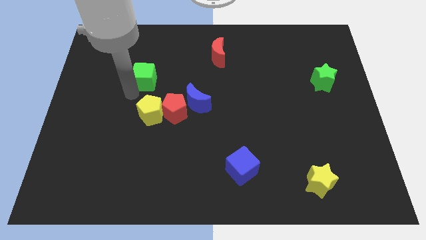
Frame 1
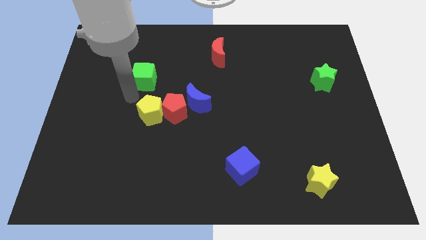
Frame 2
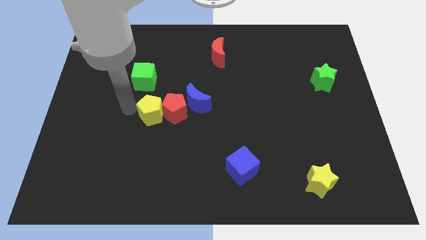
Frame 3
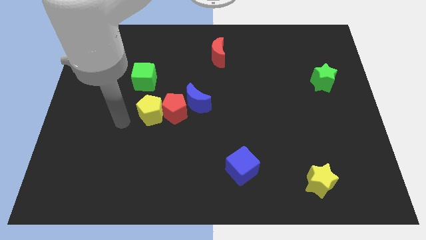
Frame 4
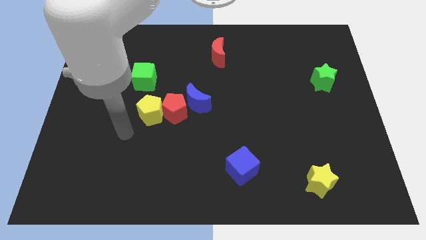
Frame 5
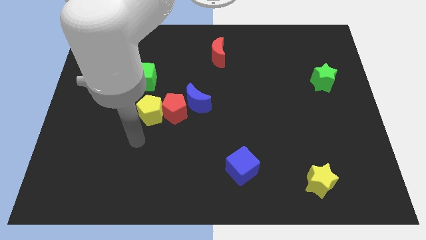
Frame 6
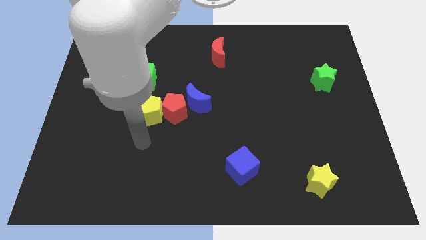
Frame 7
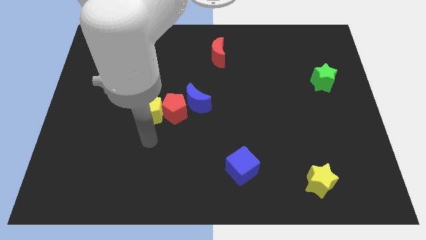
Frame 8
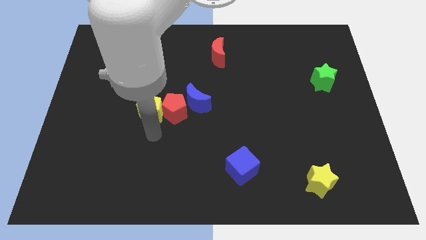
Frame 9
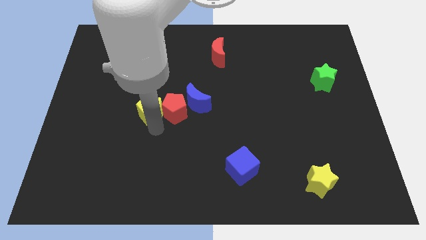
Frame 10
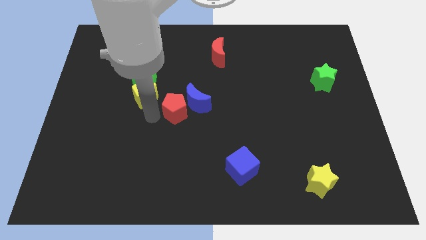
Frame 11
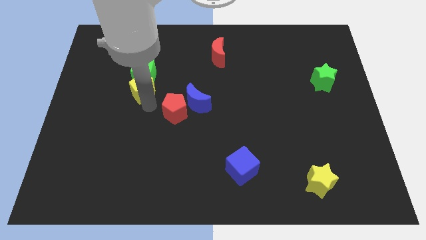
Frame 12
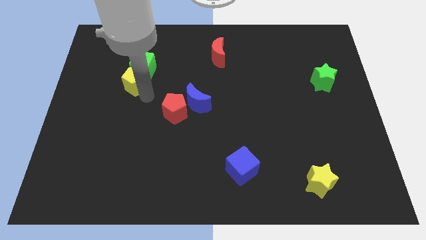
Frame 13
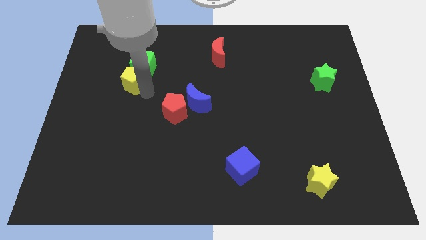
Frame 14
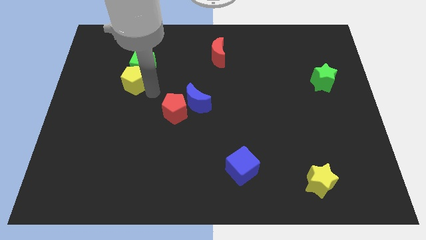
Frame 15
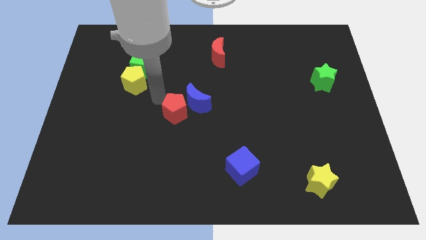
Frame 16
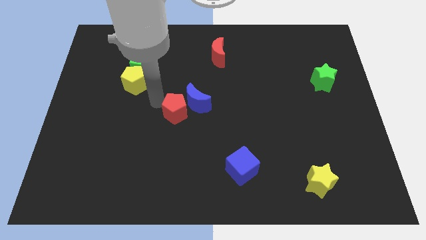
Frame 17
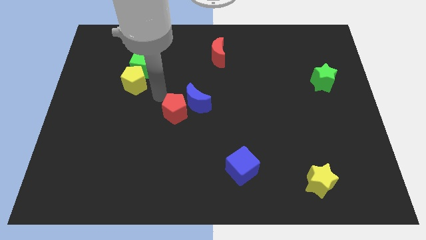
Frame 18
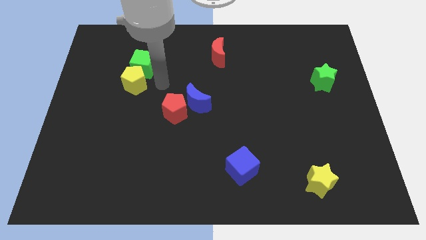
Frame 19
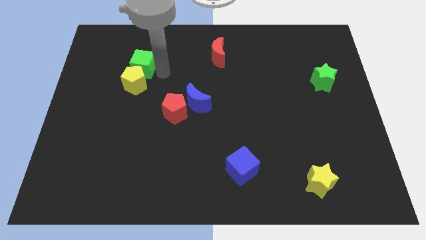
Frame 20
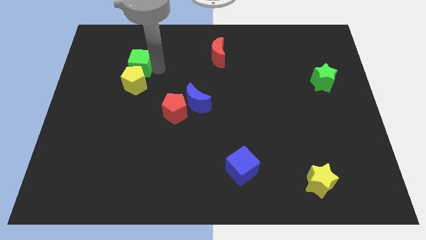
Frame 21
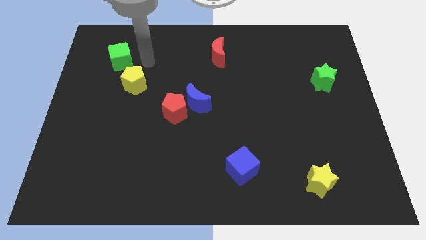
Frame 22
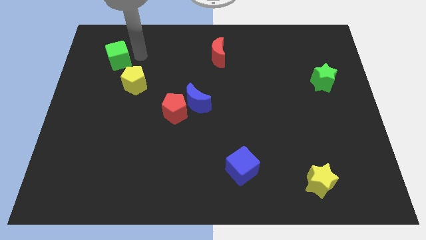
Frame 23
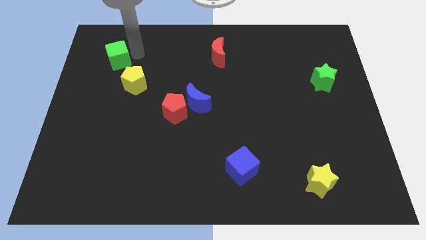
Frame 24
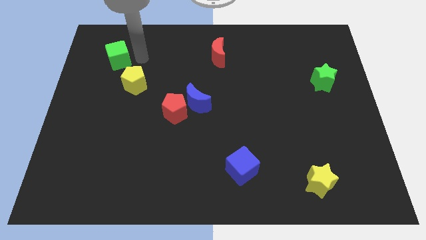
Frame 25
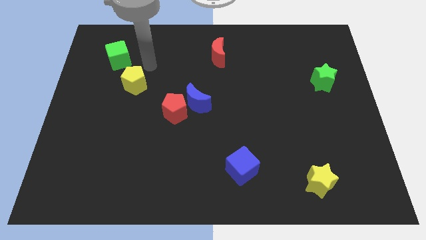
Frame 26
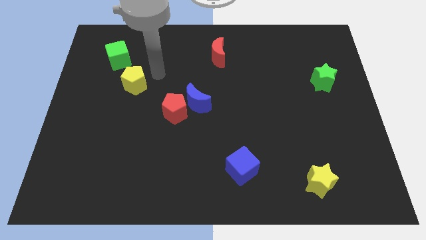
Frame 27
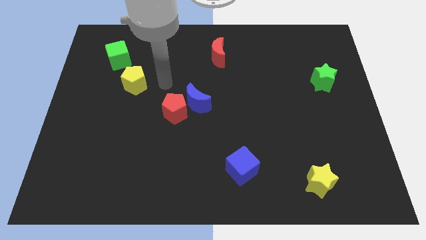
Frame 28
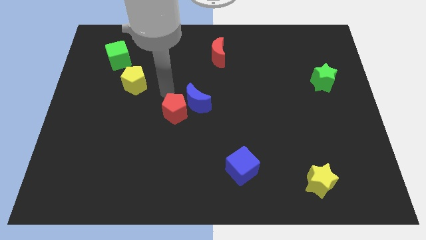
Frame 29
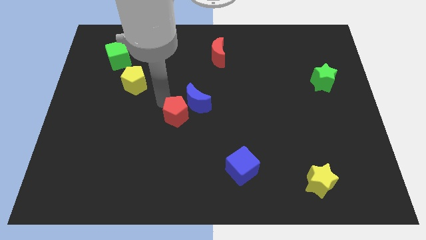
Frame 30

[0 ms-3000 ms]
place the green cube to the left of the red moon

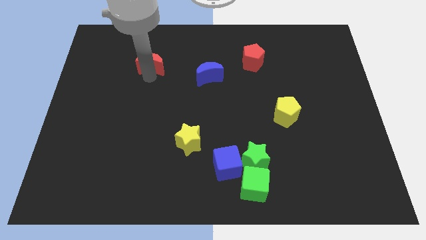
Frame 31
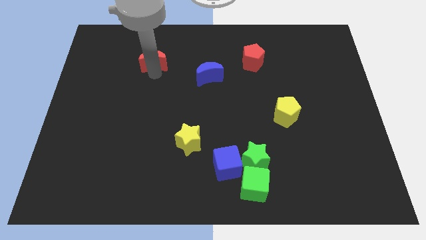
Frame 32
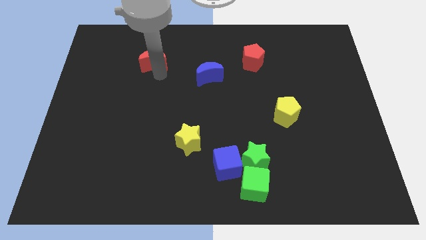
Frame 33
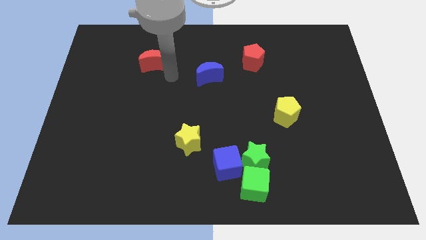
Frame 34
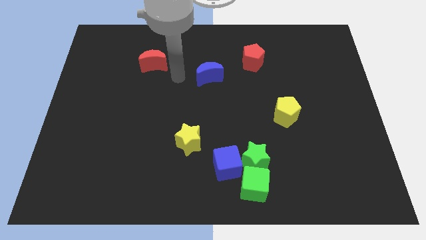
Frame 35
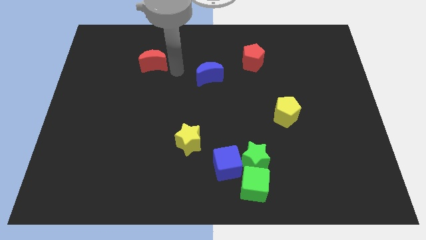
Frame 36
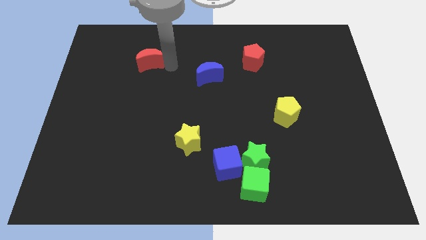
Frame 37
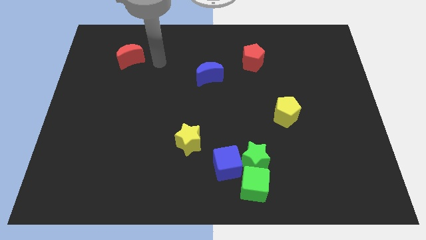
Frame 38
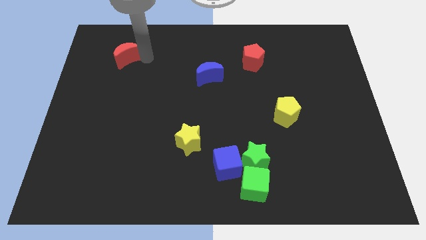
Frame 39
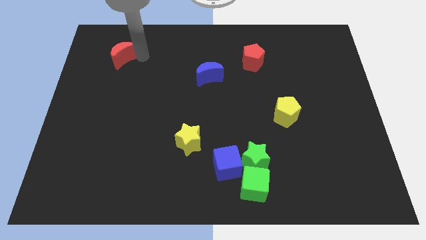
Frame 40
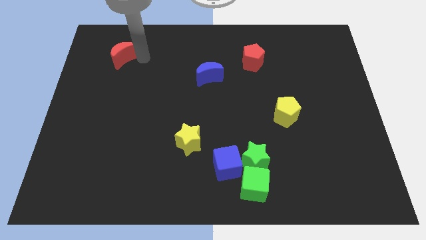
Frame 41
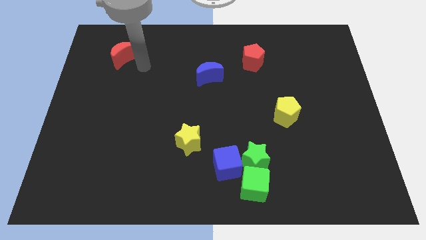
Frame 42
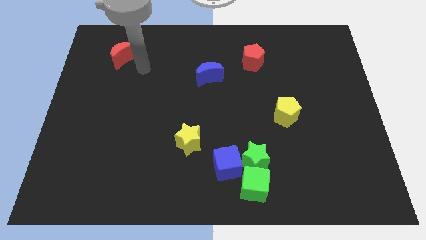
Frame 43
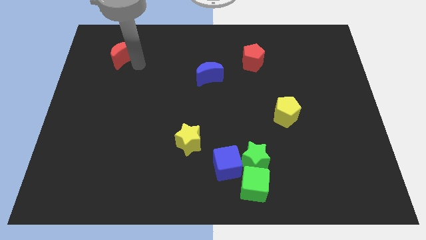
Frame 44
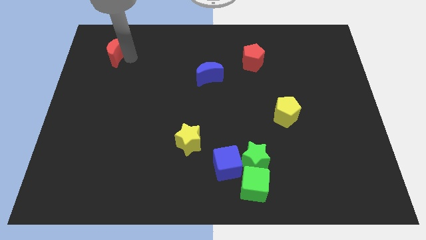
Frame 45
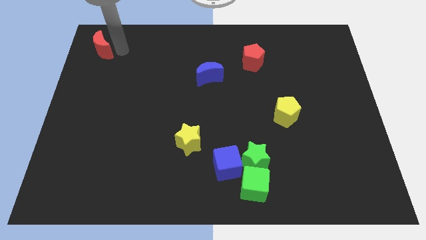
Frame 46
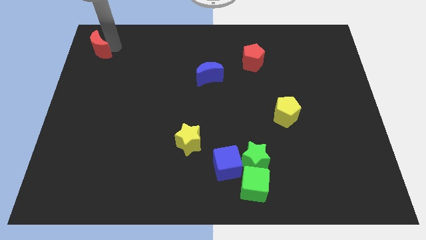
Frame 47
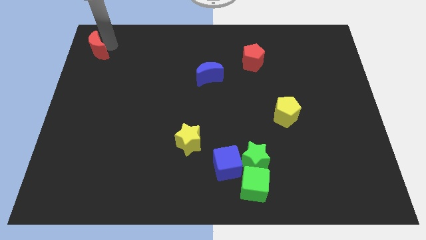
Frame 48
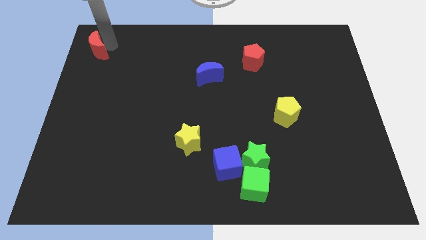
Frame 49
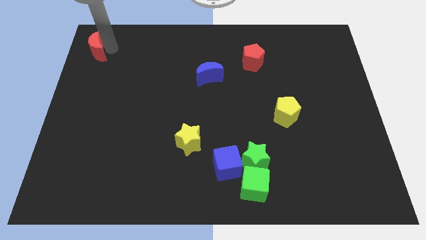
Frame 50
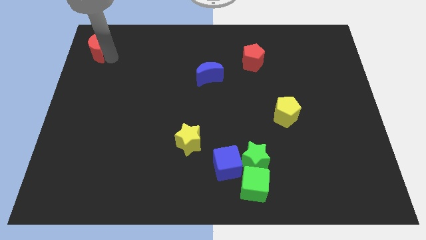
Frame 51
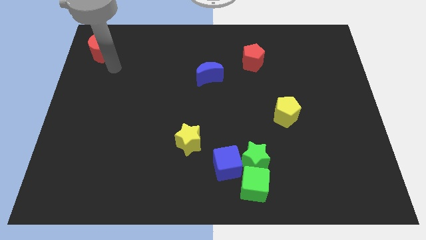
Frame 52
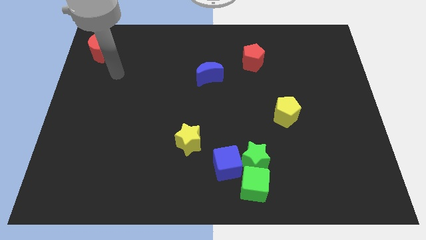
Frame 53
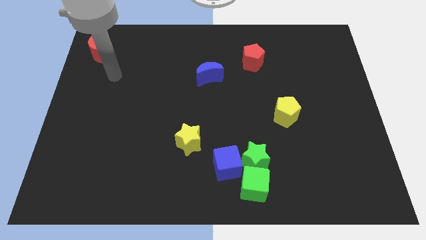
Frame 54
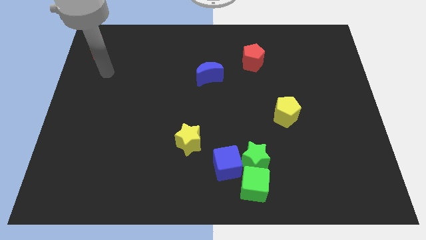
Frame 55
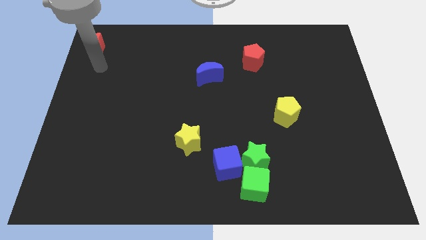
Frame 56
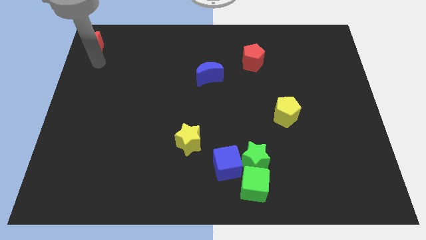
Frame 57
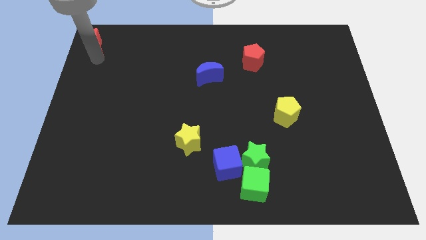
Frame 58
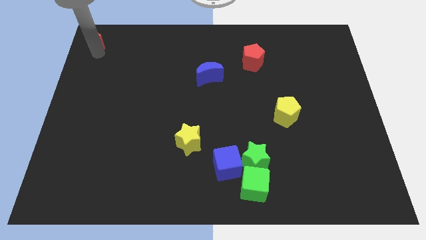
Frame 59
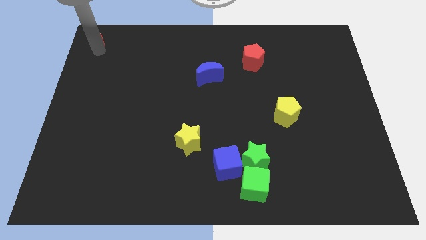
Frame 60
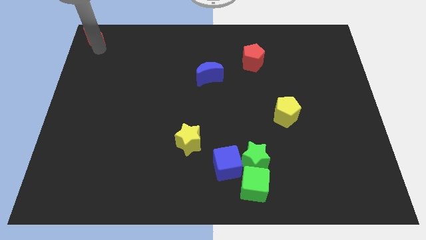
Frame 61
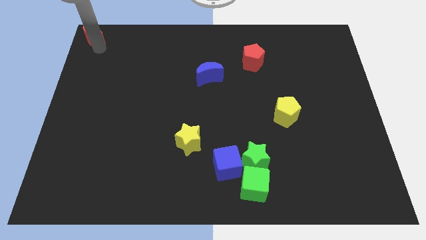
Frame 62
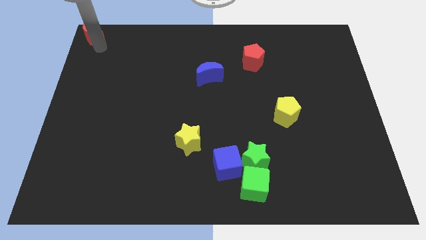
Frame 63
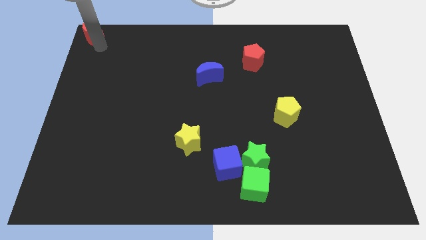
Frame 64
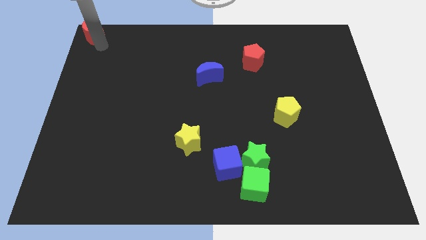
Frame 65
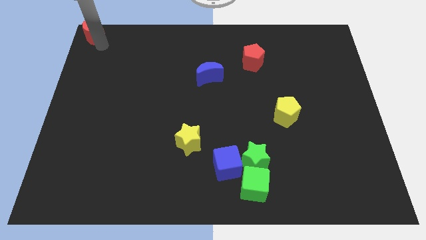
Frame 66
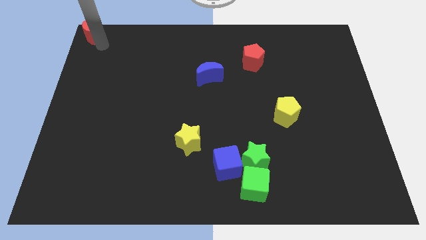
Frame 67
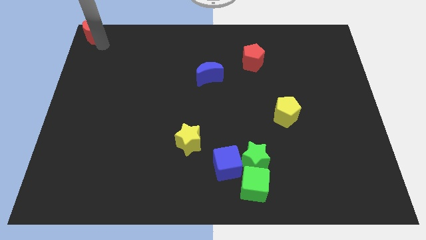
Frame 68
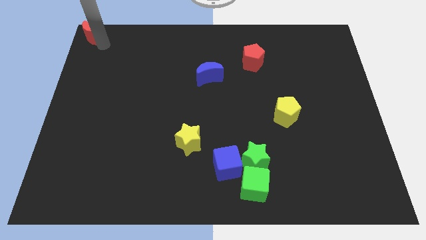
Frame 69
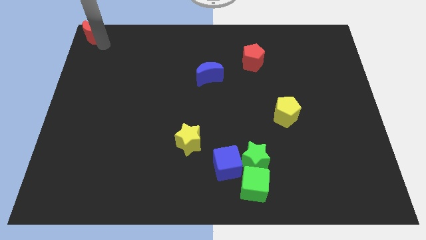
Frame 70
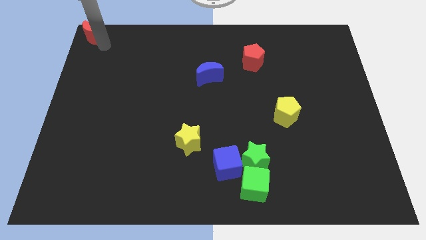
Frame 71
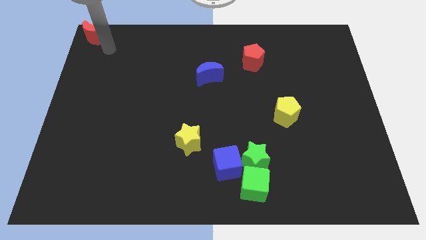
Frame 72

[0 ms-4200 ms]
push the red moon to the top left of the board

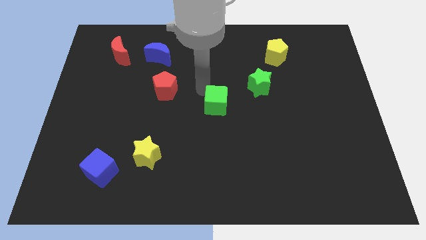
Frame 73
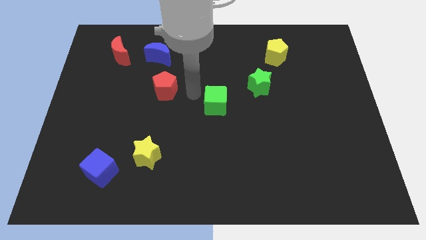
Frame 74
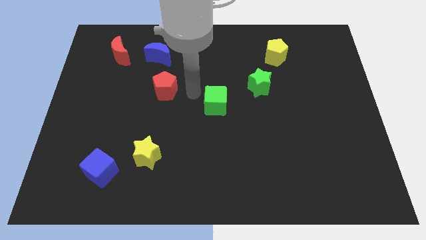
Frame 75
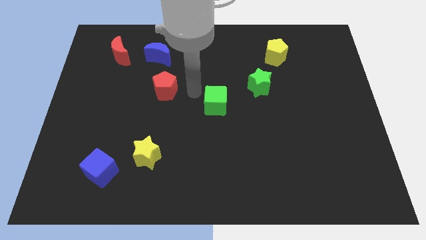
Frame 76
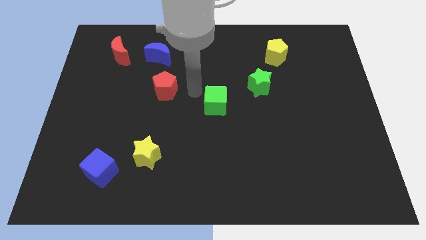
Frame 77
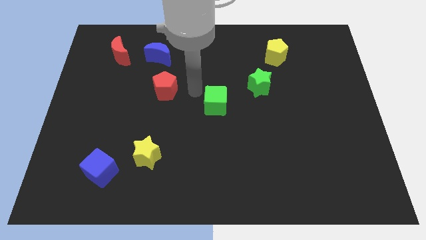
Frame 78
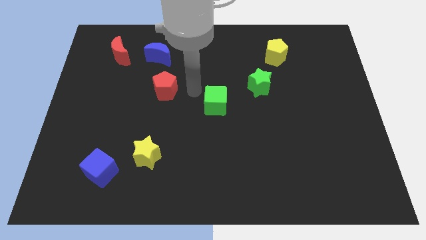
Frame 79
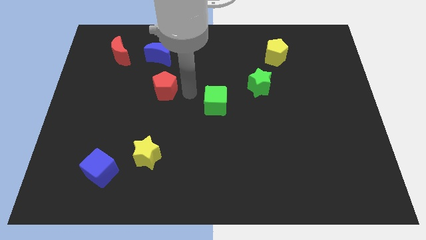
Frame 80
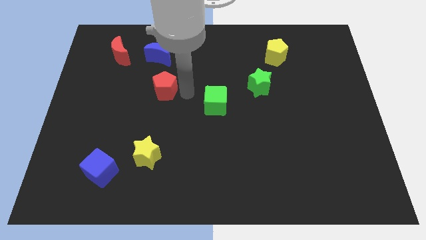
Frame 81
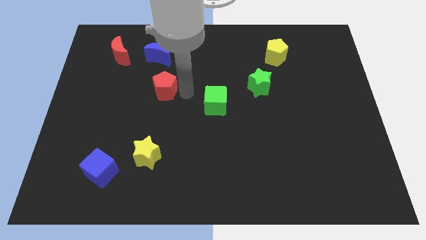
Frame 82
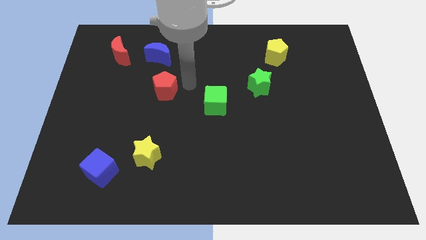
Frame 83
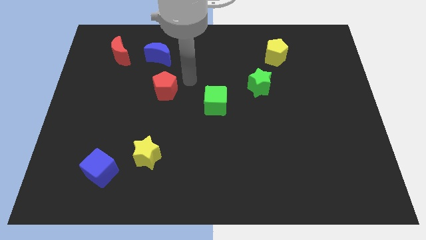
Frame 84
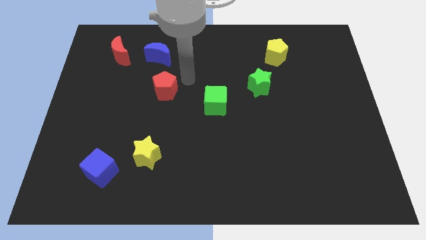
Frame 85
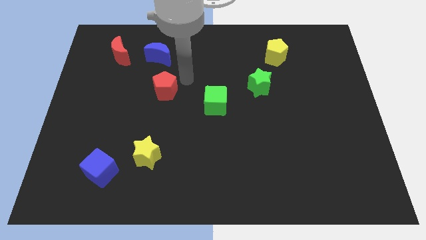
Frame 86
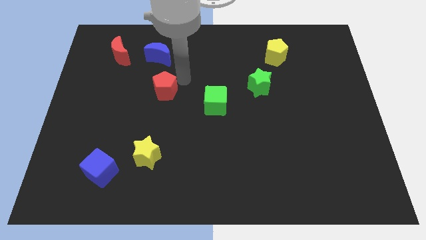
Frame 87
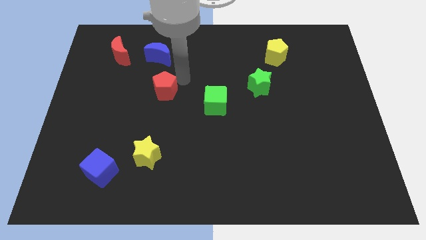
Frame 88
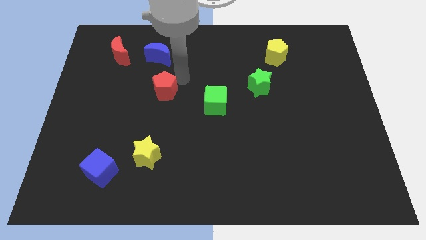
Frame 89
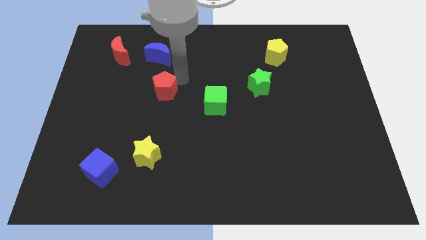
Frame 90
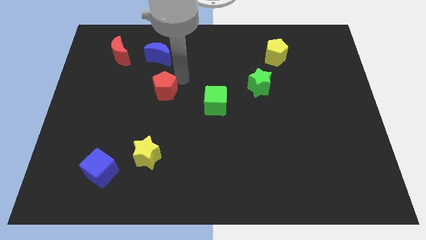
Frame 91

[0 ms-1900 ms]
move away from the green cube
